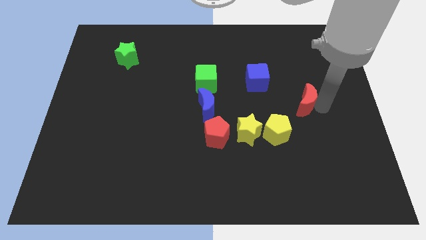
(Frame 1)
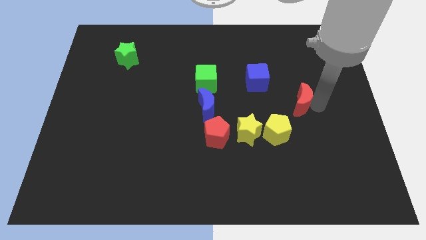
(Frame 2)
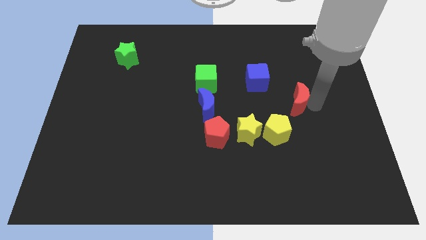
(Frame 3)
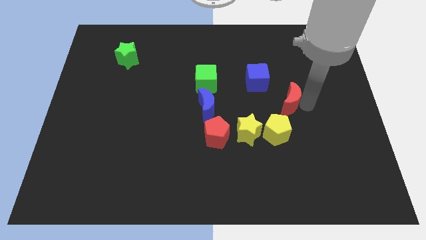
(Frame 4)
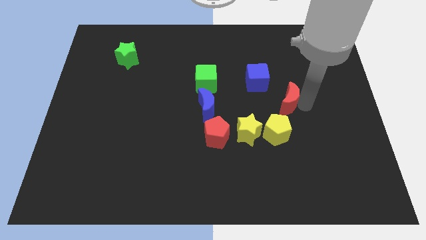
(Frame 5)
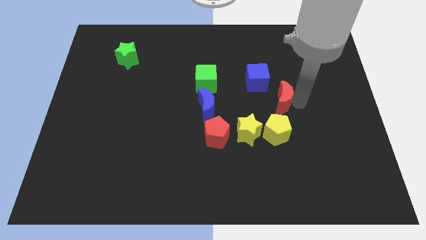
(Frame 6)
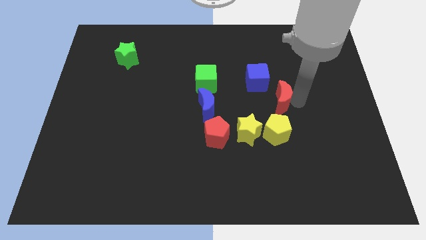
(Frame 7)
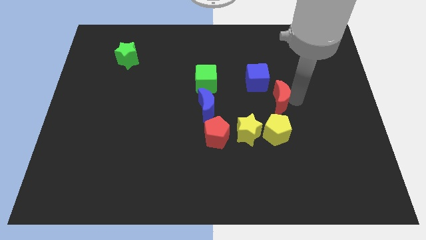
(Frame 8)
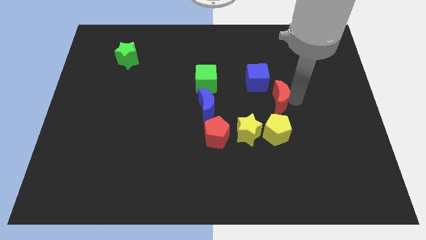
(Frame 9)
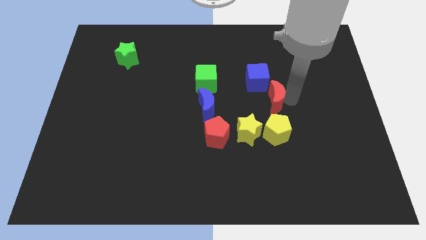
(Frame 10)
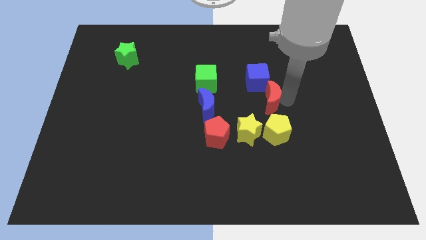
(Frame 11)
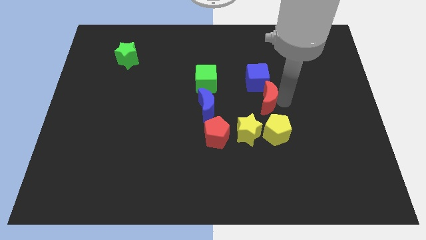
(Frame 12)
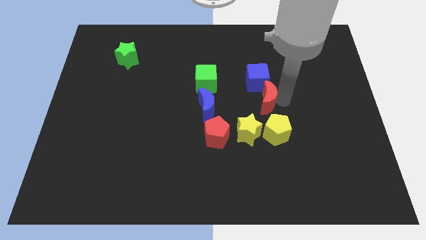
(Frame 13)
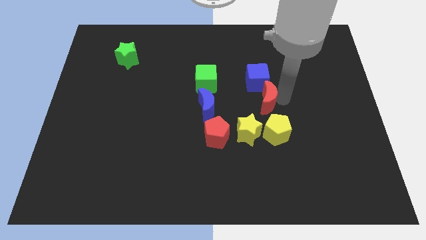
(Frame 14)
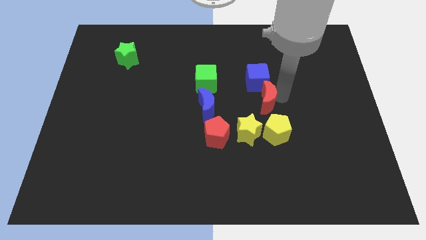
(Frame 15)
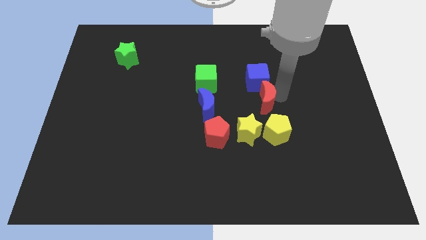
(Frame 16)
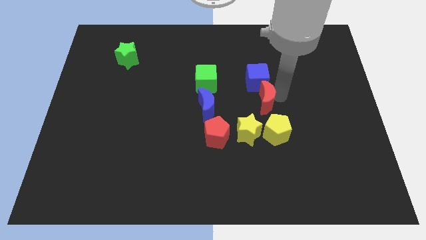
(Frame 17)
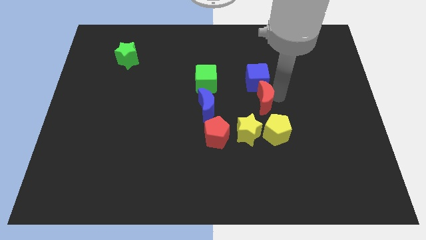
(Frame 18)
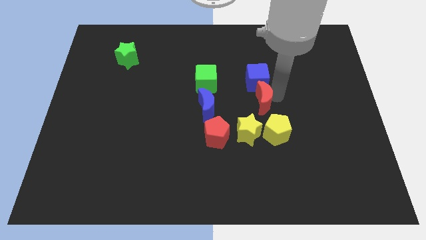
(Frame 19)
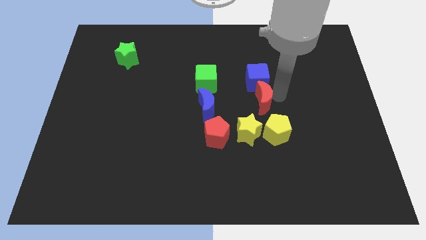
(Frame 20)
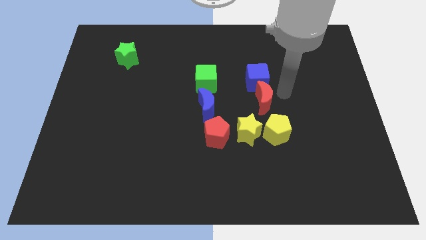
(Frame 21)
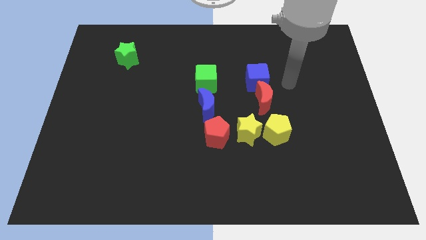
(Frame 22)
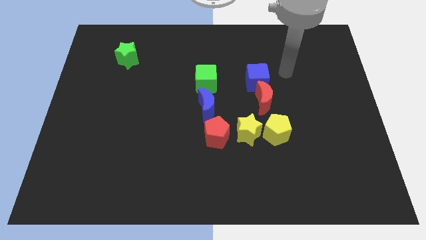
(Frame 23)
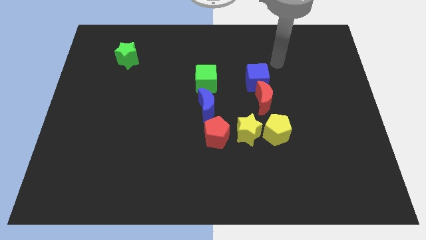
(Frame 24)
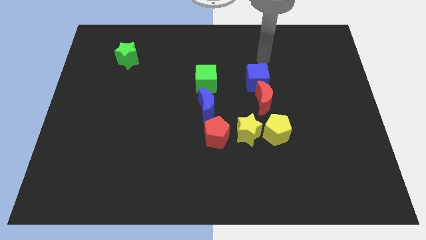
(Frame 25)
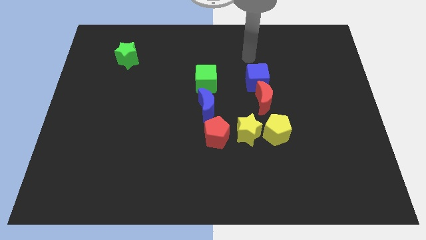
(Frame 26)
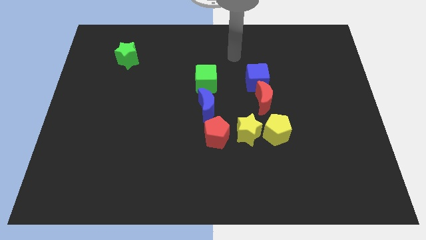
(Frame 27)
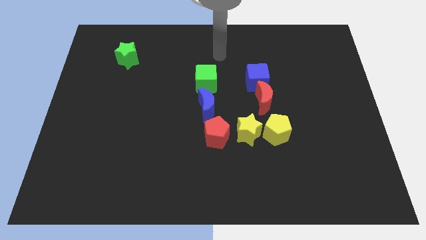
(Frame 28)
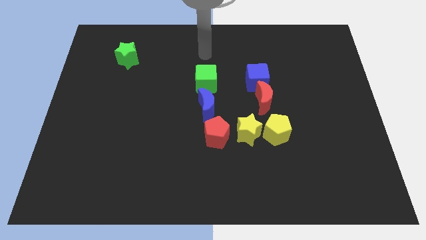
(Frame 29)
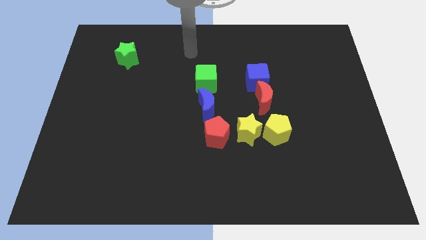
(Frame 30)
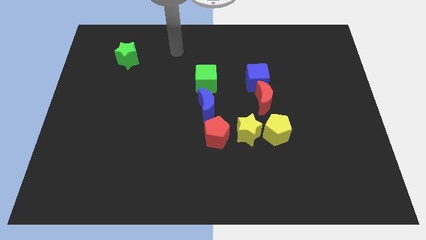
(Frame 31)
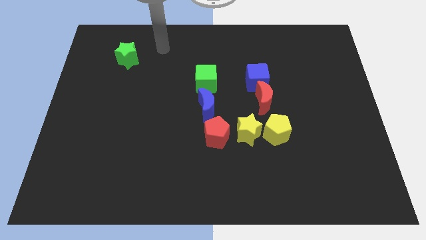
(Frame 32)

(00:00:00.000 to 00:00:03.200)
move your arm towards the green star

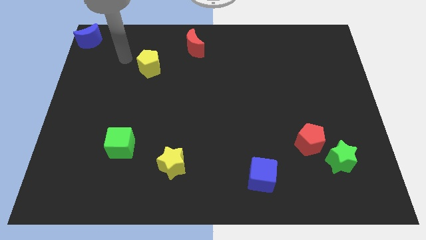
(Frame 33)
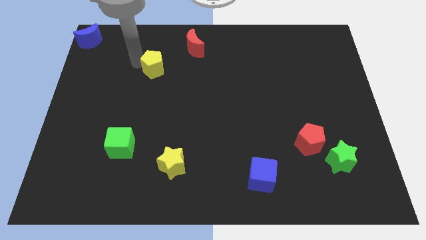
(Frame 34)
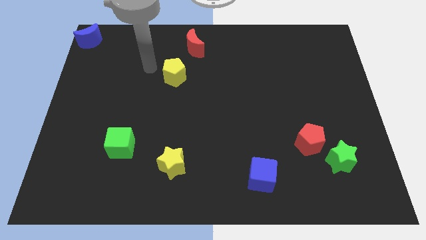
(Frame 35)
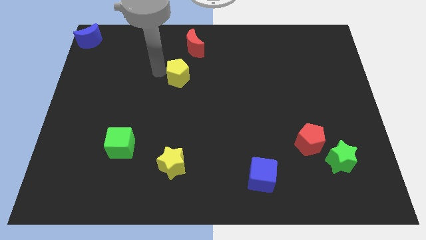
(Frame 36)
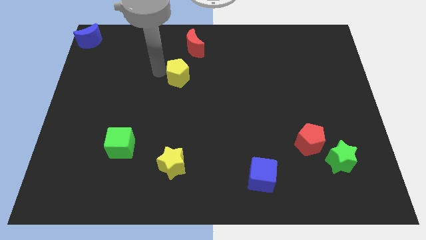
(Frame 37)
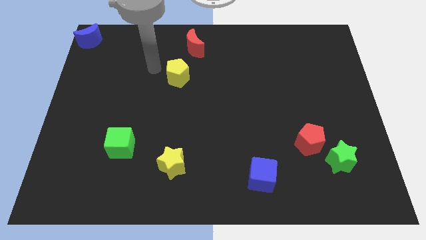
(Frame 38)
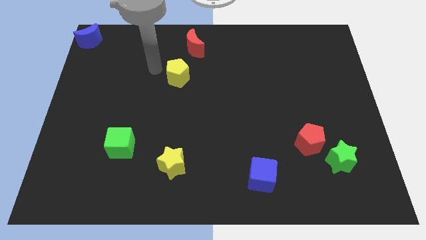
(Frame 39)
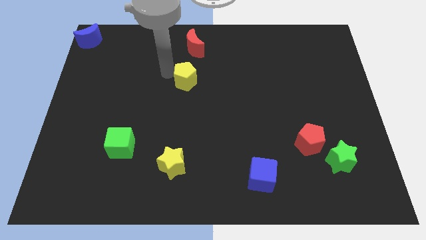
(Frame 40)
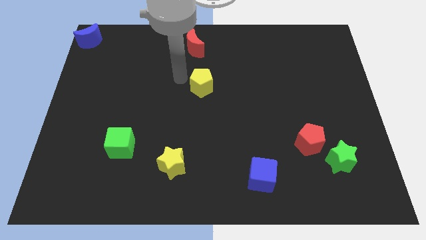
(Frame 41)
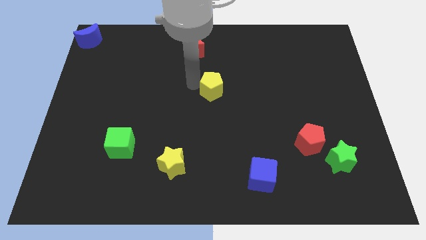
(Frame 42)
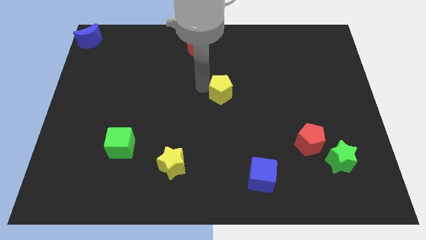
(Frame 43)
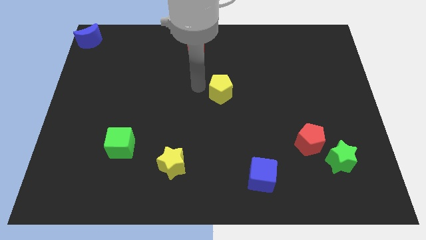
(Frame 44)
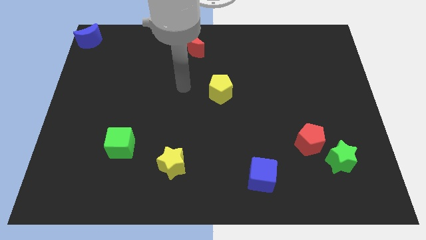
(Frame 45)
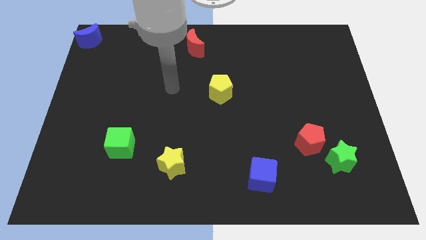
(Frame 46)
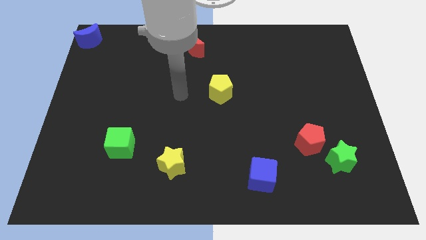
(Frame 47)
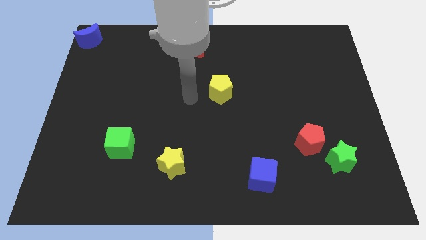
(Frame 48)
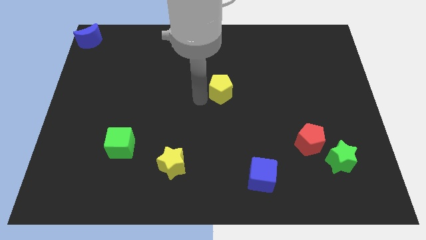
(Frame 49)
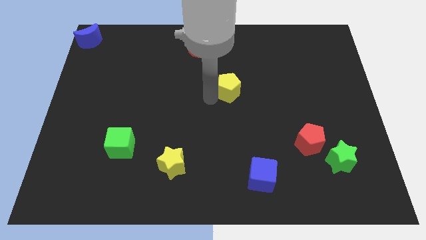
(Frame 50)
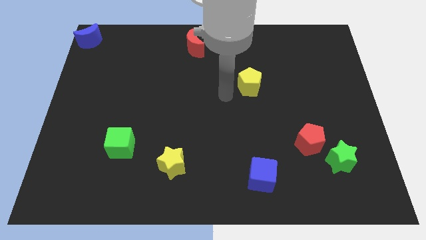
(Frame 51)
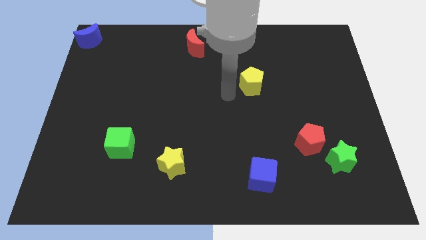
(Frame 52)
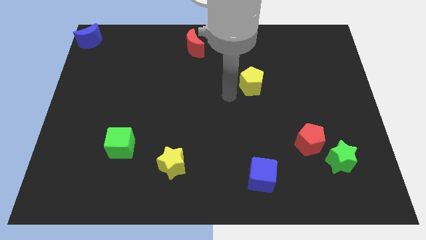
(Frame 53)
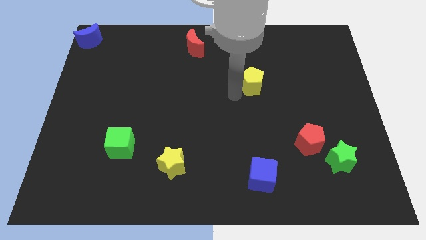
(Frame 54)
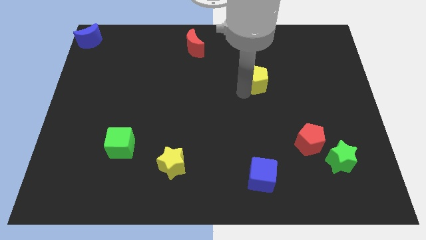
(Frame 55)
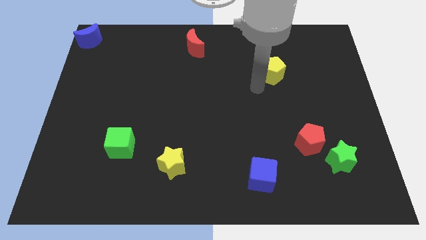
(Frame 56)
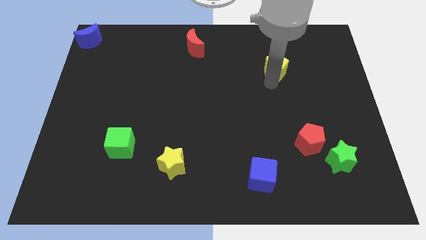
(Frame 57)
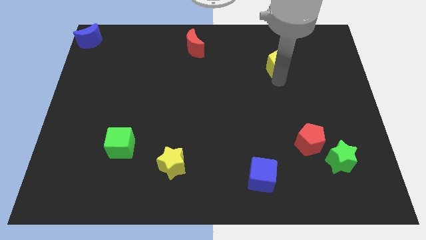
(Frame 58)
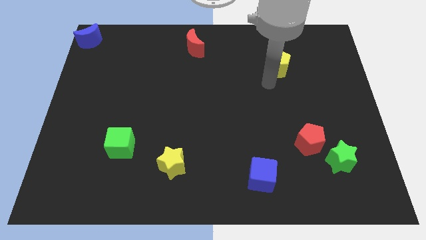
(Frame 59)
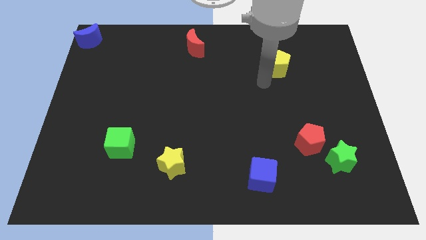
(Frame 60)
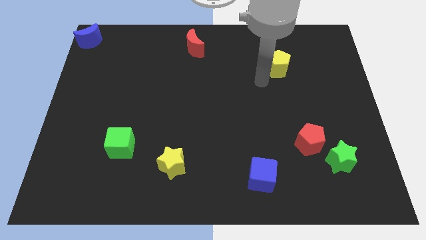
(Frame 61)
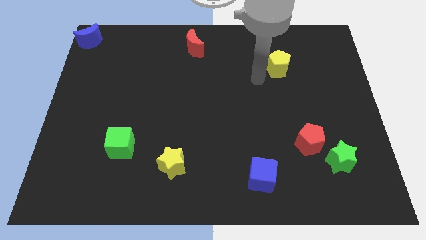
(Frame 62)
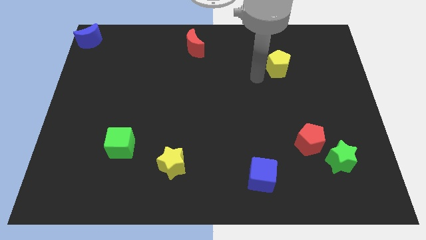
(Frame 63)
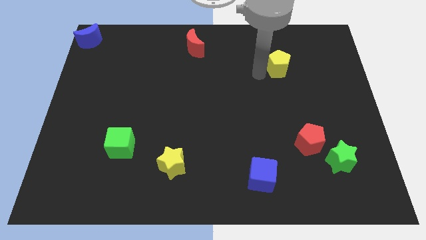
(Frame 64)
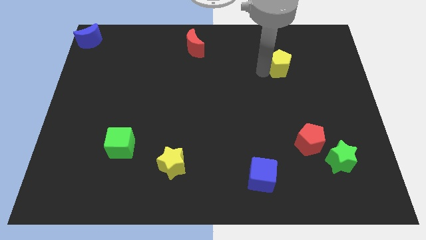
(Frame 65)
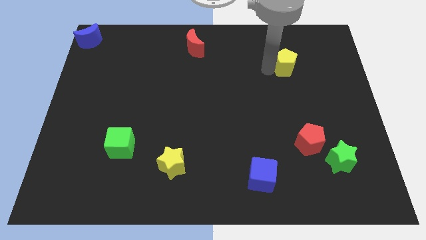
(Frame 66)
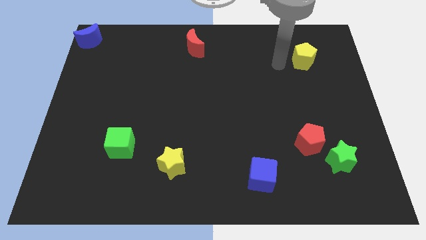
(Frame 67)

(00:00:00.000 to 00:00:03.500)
push the yellow pentagon to the top of the red pentagon

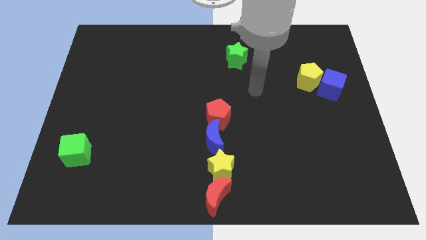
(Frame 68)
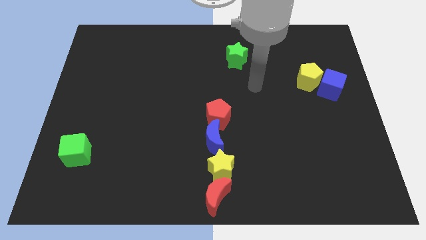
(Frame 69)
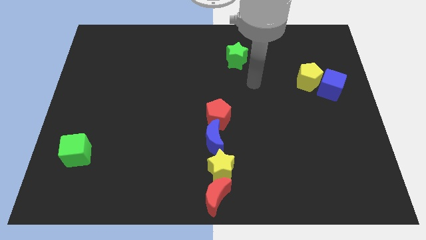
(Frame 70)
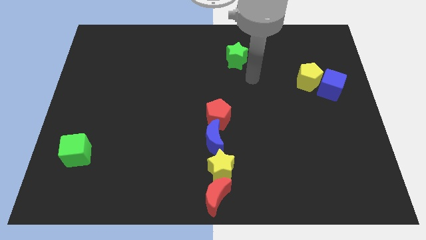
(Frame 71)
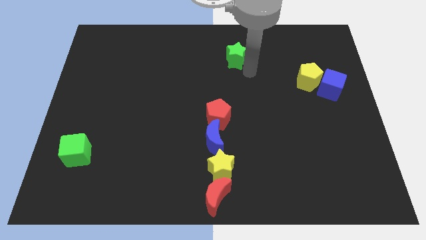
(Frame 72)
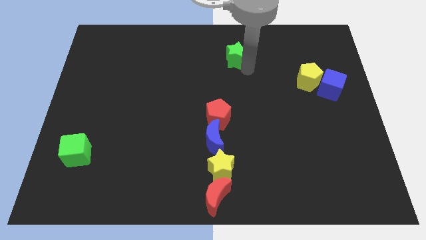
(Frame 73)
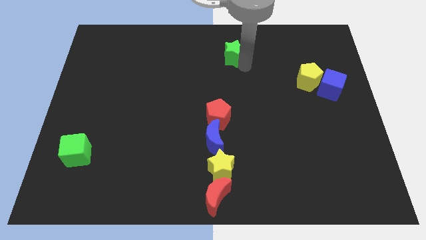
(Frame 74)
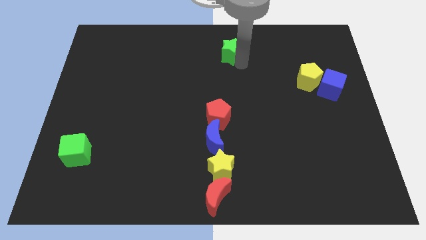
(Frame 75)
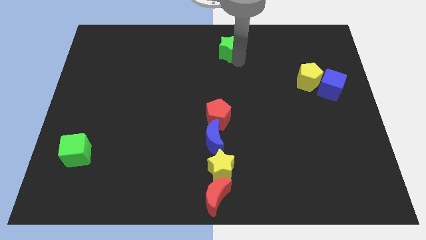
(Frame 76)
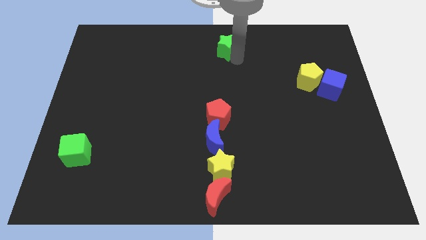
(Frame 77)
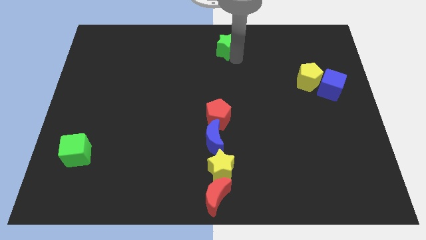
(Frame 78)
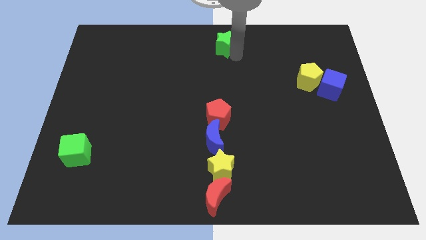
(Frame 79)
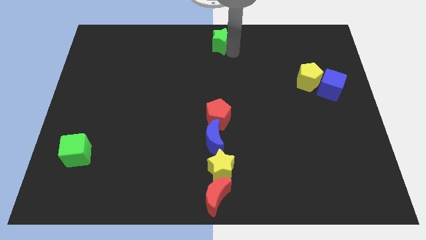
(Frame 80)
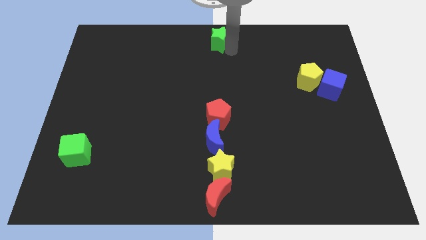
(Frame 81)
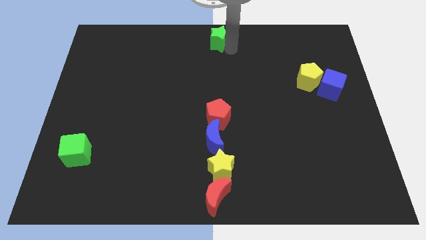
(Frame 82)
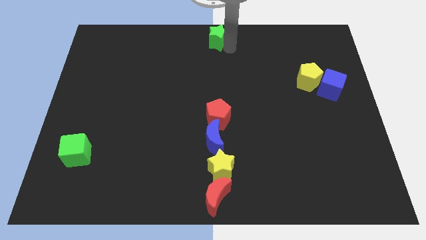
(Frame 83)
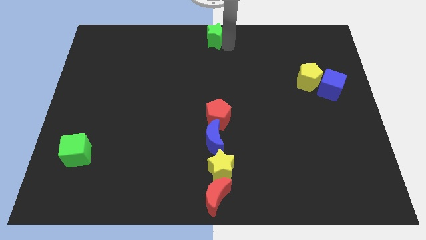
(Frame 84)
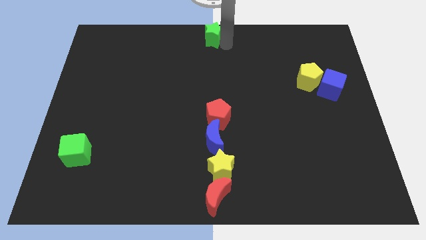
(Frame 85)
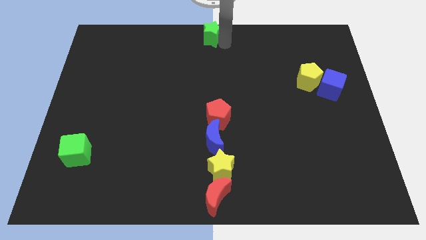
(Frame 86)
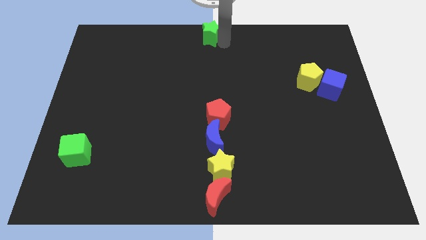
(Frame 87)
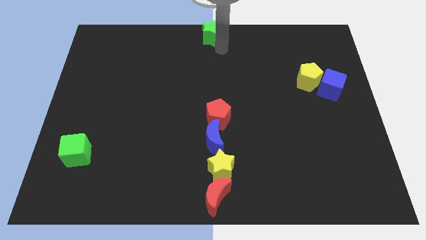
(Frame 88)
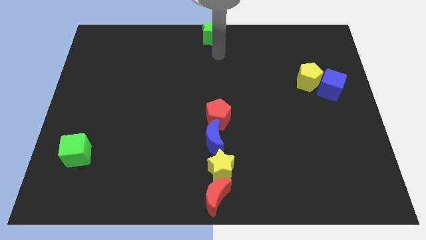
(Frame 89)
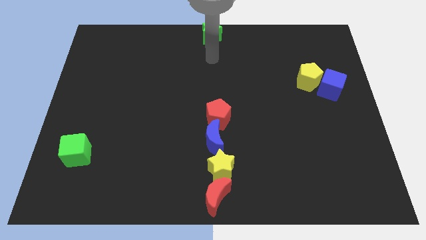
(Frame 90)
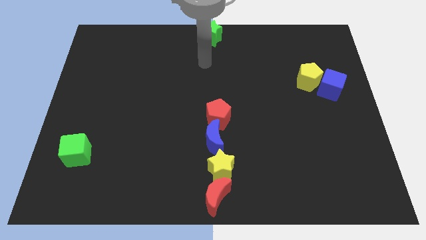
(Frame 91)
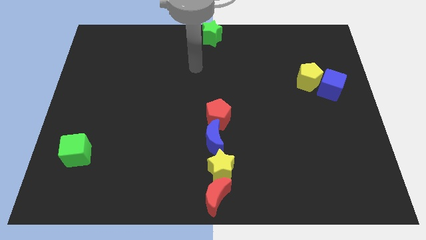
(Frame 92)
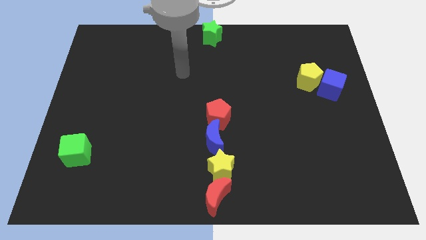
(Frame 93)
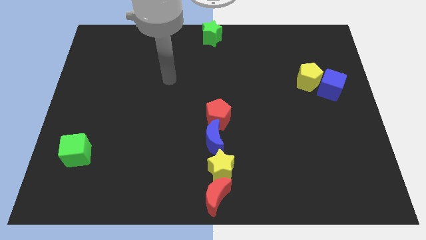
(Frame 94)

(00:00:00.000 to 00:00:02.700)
push green star to the top center of the board
